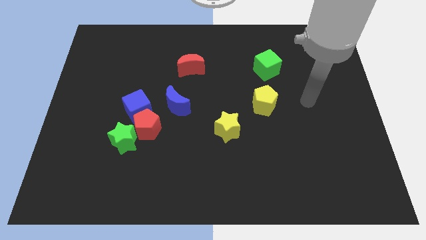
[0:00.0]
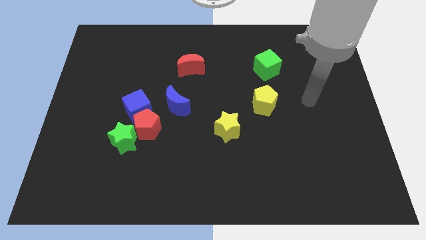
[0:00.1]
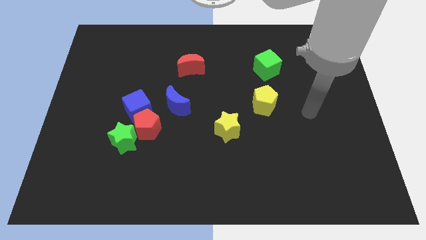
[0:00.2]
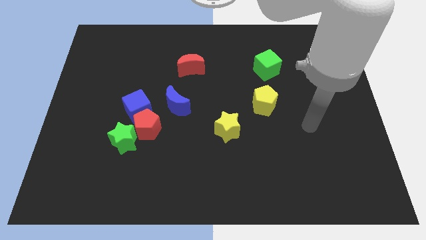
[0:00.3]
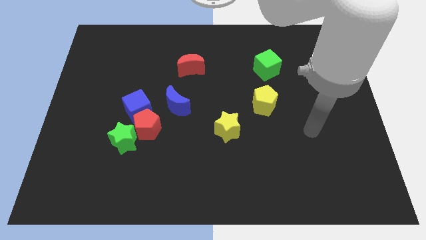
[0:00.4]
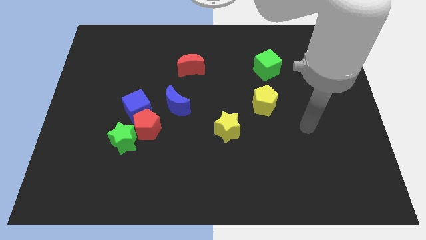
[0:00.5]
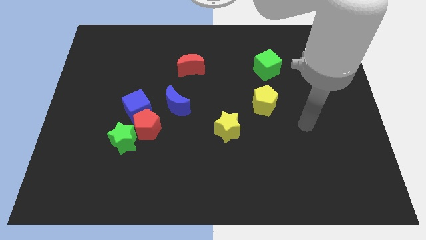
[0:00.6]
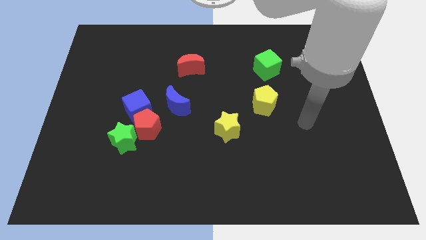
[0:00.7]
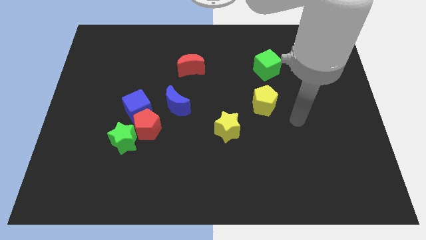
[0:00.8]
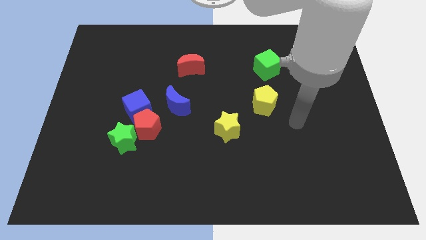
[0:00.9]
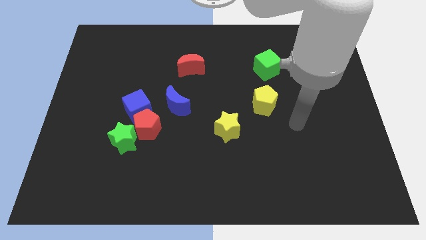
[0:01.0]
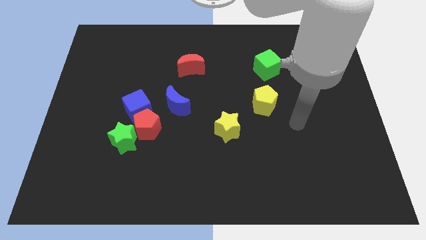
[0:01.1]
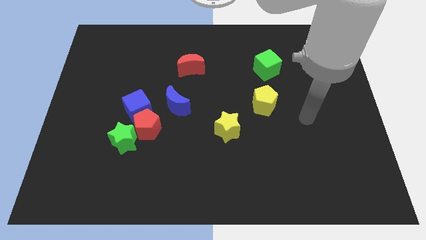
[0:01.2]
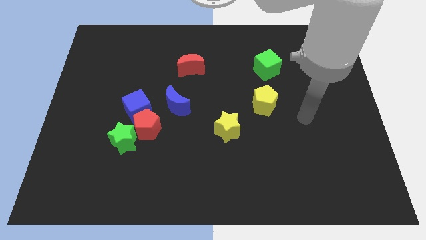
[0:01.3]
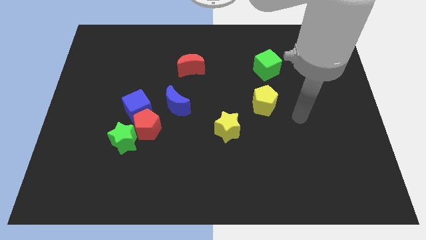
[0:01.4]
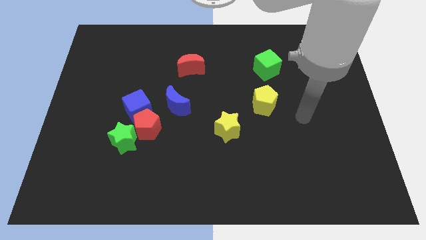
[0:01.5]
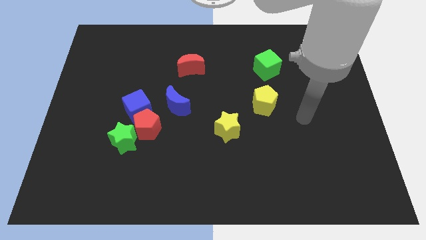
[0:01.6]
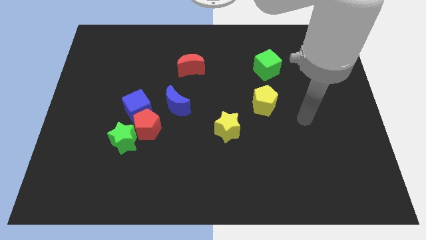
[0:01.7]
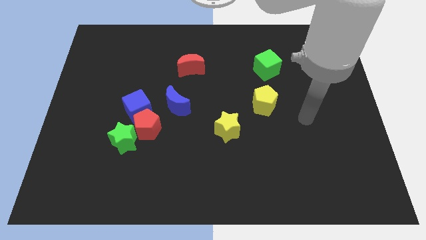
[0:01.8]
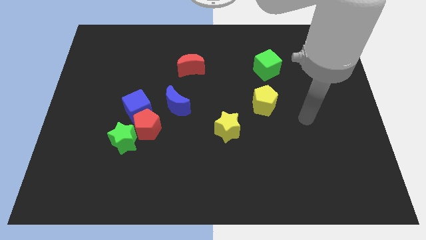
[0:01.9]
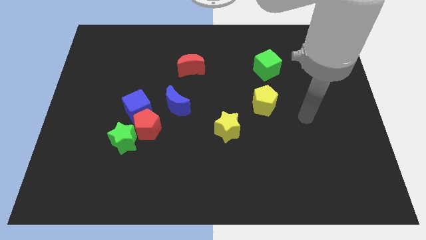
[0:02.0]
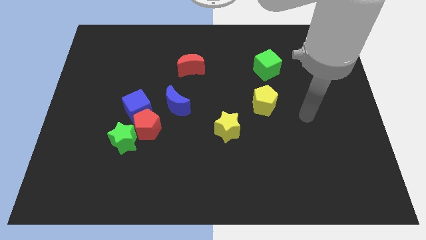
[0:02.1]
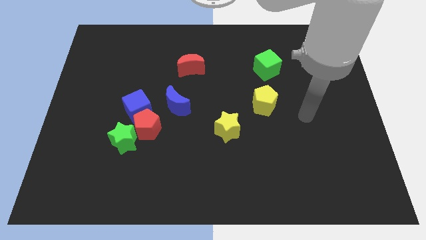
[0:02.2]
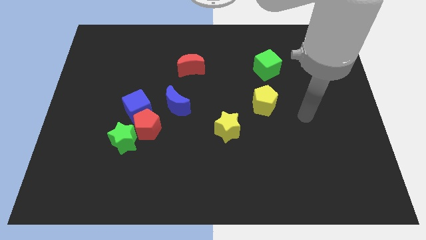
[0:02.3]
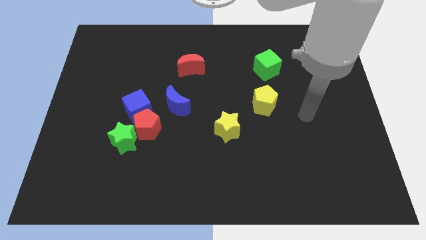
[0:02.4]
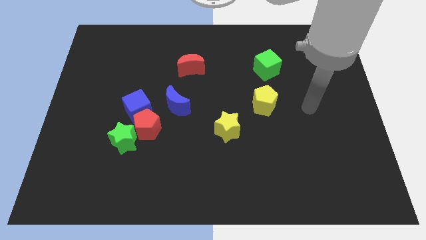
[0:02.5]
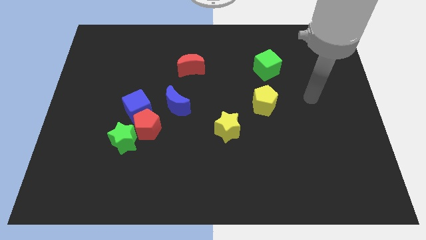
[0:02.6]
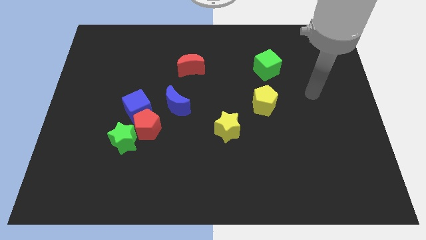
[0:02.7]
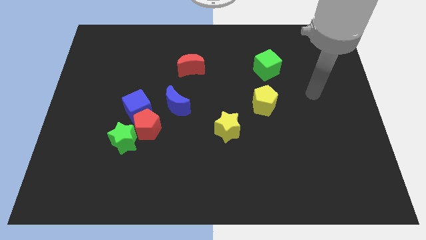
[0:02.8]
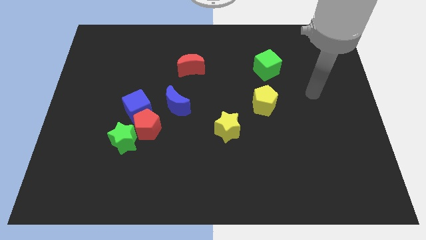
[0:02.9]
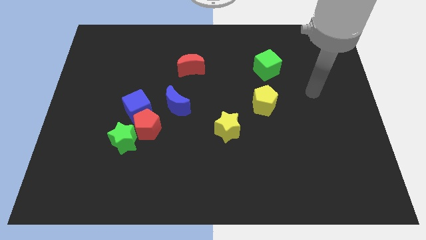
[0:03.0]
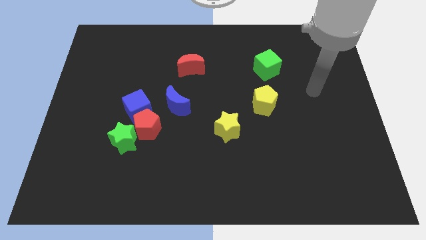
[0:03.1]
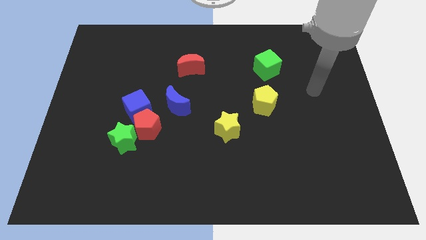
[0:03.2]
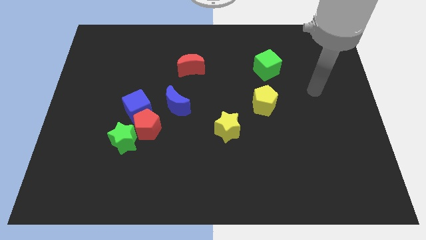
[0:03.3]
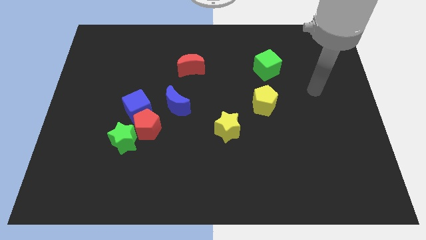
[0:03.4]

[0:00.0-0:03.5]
move your arm slightly towards the top of the board

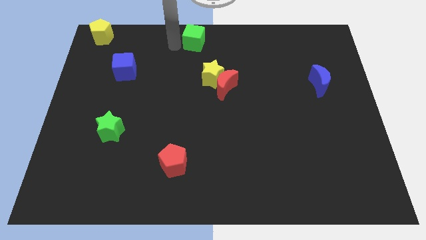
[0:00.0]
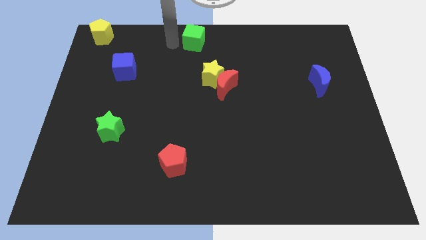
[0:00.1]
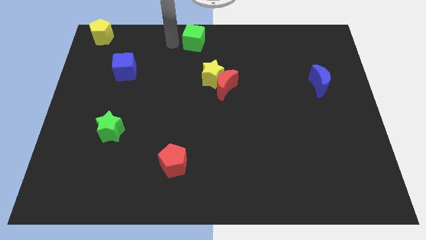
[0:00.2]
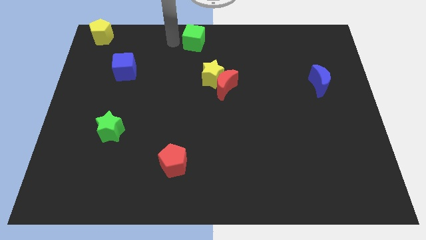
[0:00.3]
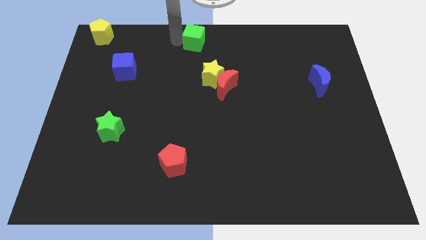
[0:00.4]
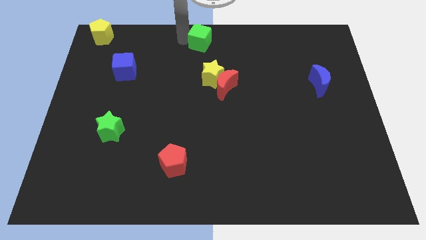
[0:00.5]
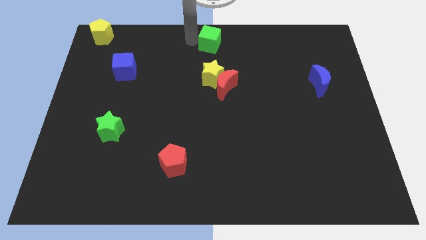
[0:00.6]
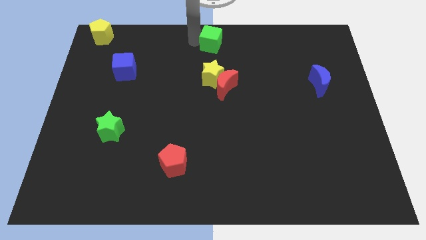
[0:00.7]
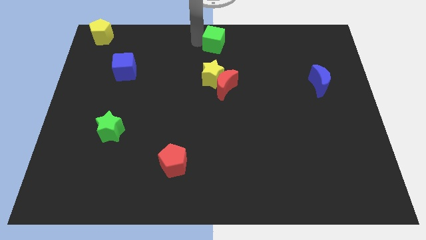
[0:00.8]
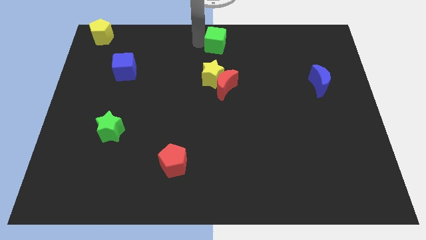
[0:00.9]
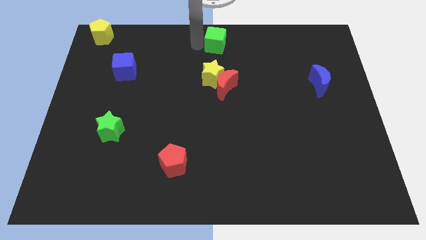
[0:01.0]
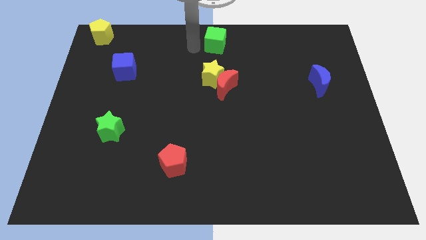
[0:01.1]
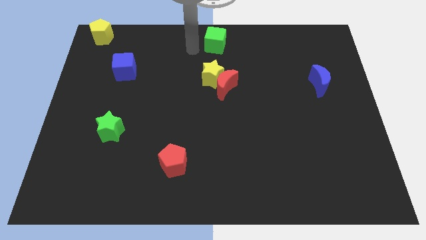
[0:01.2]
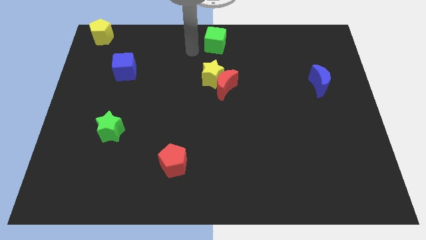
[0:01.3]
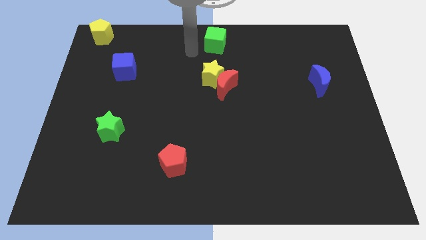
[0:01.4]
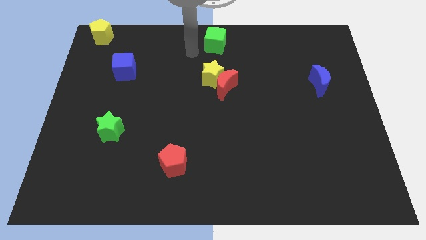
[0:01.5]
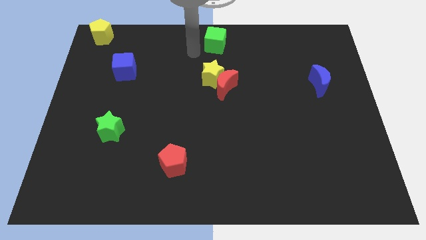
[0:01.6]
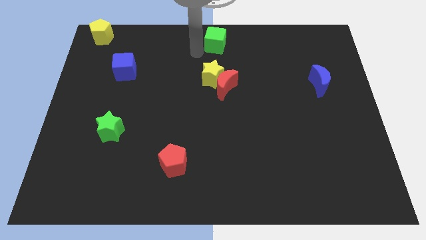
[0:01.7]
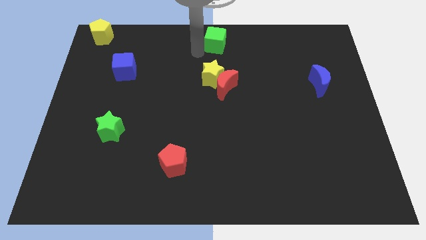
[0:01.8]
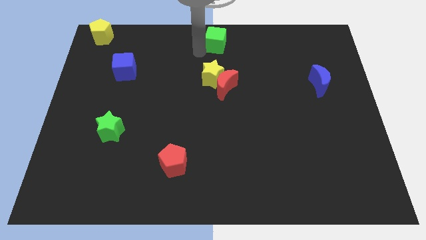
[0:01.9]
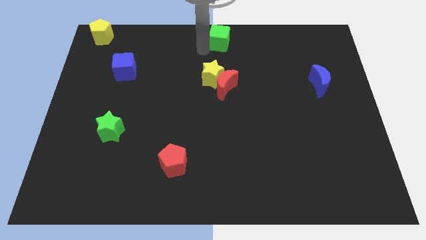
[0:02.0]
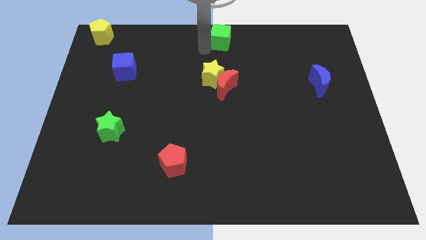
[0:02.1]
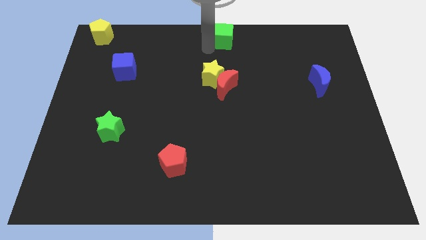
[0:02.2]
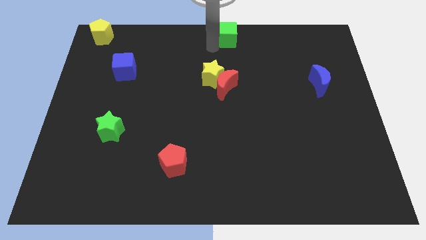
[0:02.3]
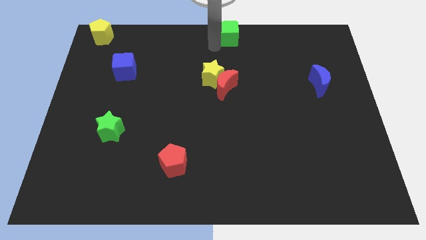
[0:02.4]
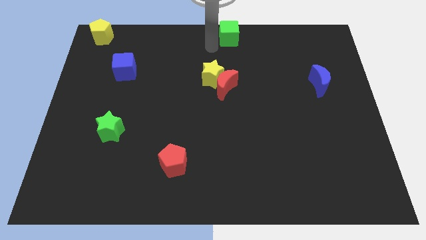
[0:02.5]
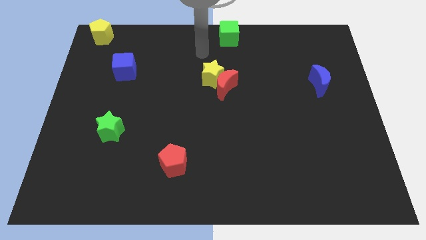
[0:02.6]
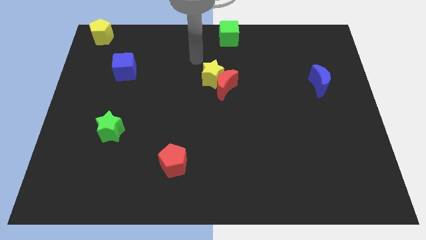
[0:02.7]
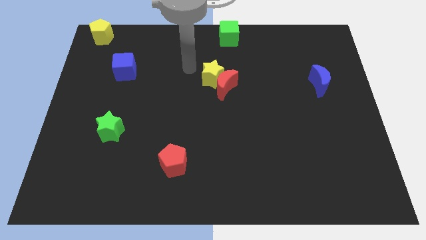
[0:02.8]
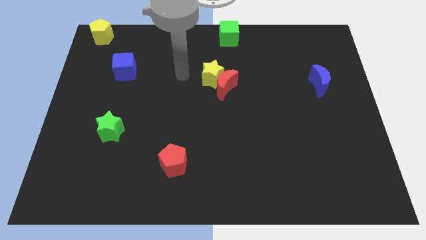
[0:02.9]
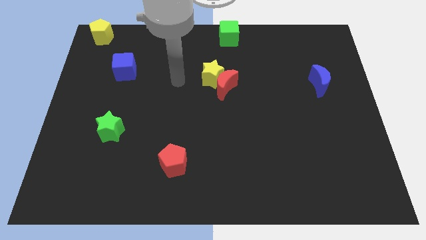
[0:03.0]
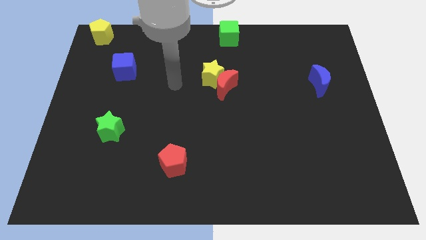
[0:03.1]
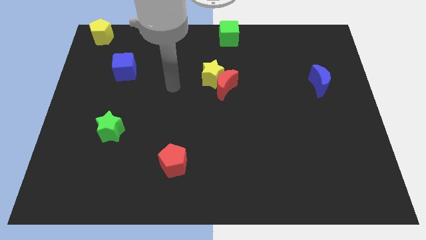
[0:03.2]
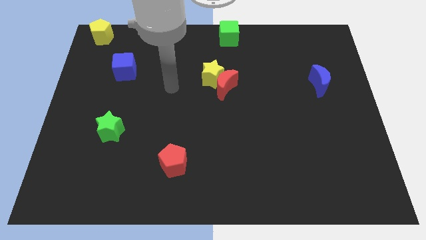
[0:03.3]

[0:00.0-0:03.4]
move the green cube towards the right side

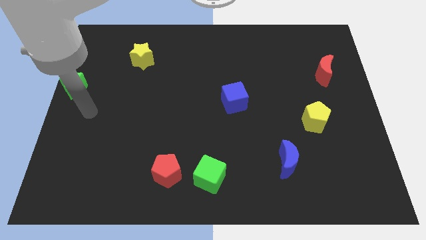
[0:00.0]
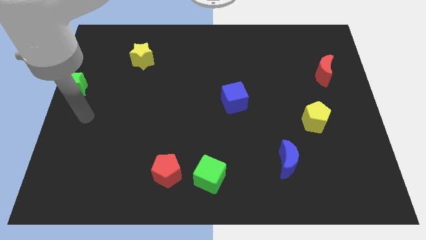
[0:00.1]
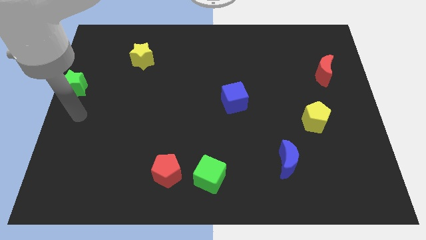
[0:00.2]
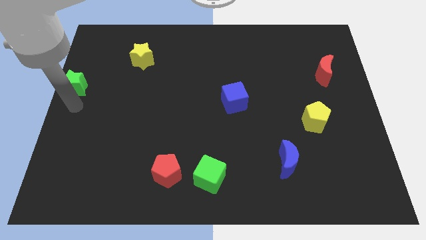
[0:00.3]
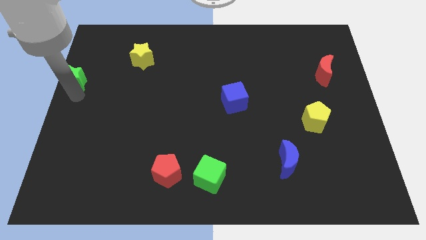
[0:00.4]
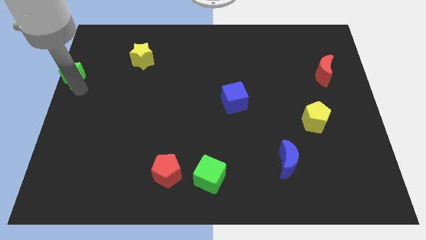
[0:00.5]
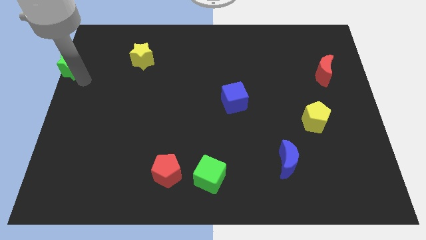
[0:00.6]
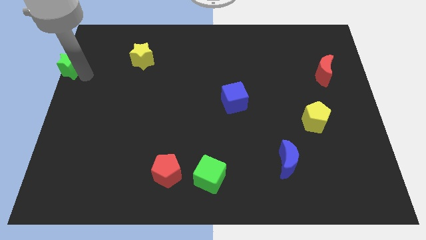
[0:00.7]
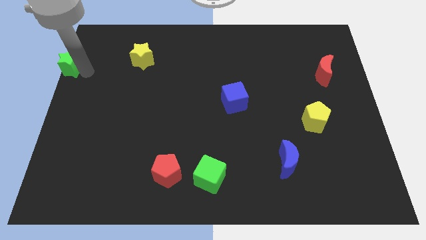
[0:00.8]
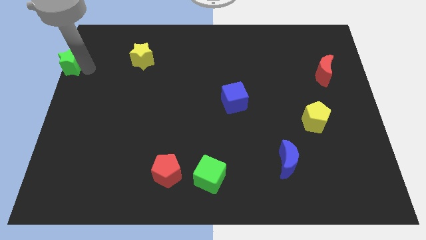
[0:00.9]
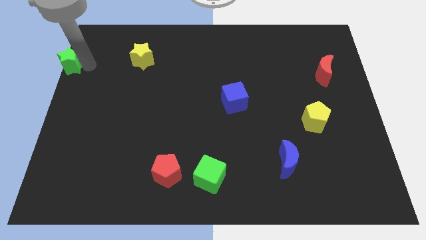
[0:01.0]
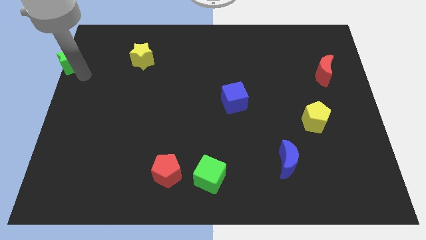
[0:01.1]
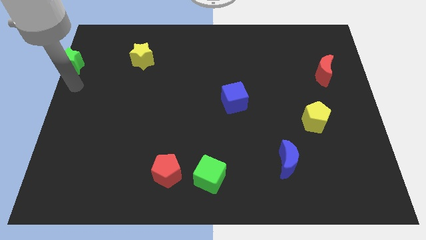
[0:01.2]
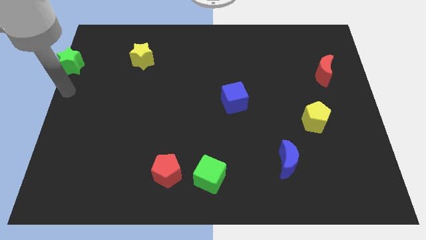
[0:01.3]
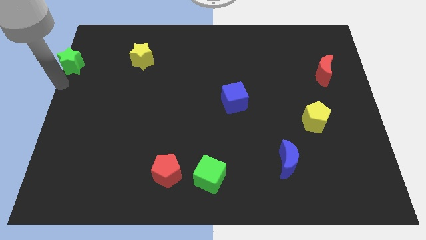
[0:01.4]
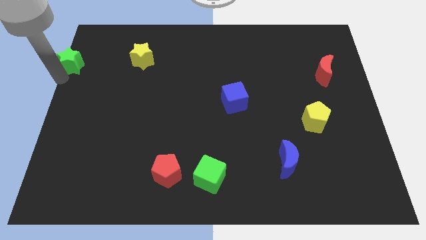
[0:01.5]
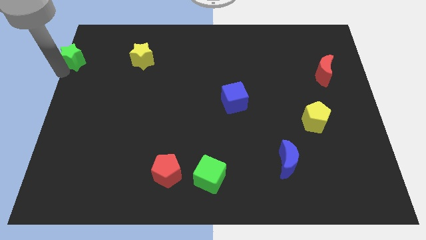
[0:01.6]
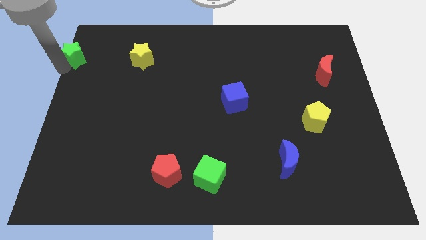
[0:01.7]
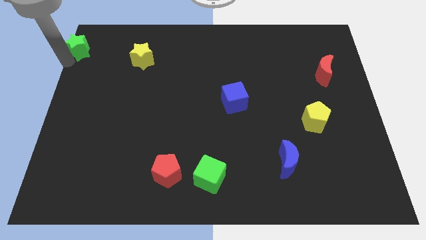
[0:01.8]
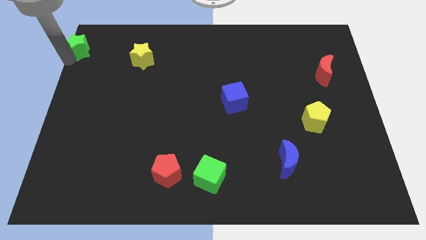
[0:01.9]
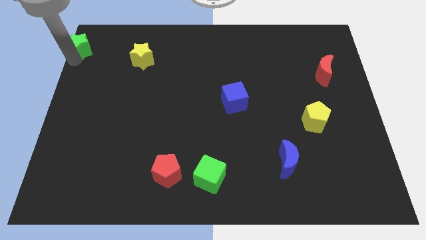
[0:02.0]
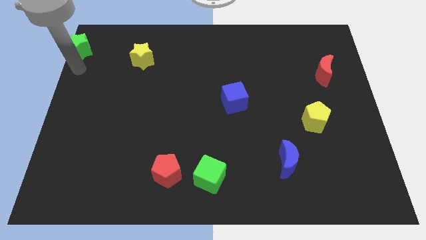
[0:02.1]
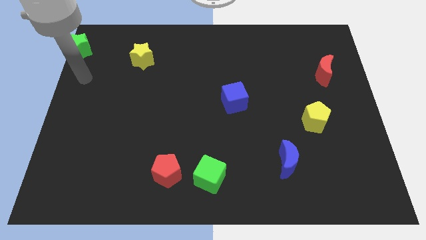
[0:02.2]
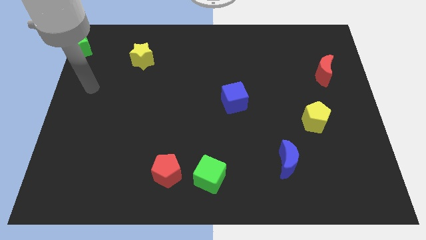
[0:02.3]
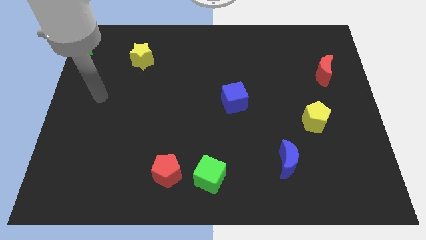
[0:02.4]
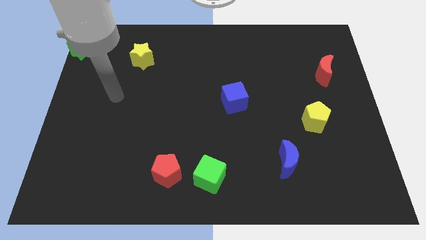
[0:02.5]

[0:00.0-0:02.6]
move the green star towards the left top of the board
